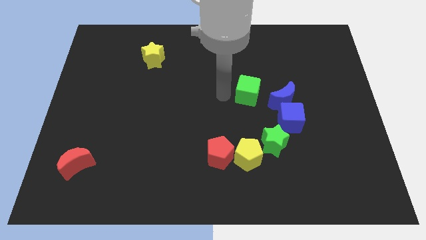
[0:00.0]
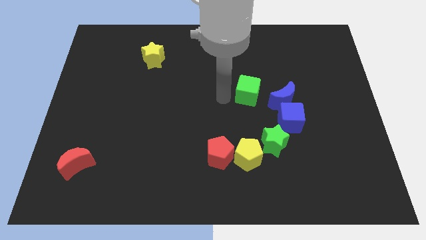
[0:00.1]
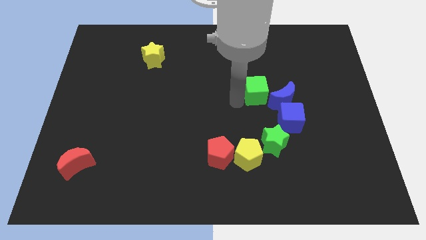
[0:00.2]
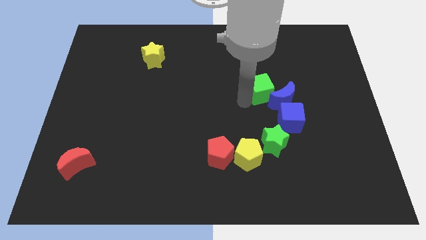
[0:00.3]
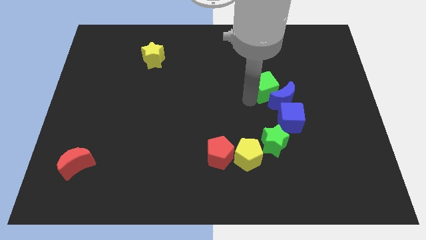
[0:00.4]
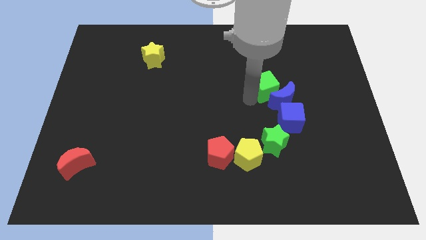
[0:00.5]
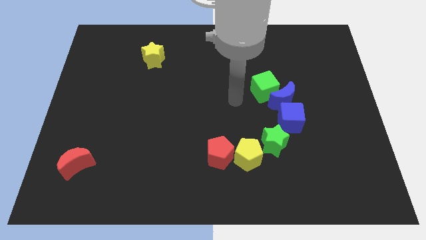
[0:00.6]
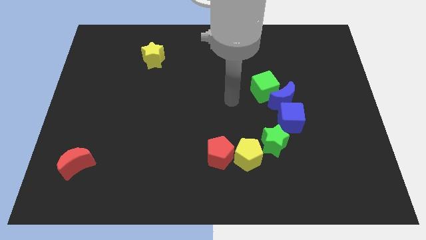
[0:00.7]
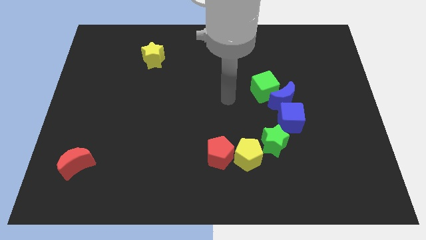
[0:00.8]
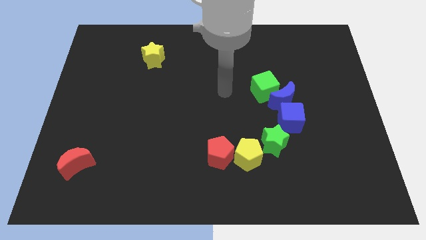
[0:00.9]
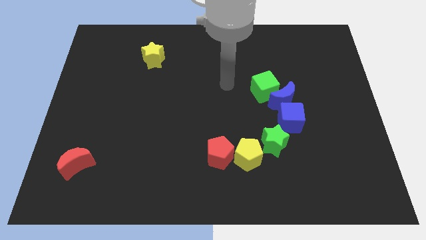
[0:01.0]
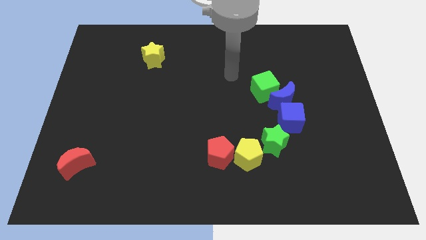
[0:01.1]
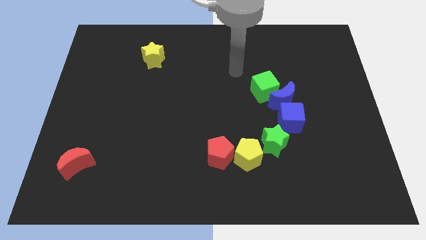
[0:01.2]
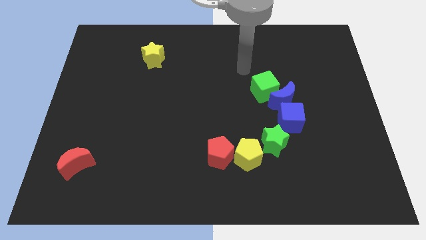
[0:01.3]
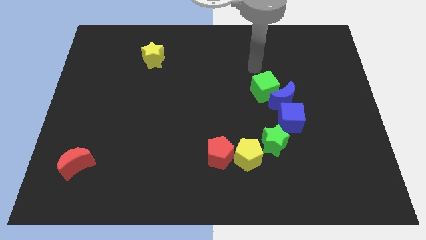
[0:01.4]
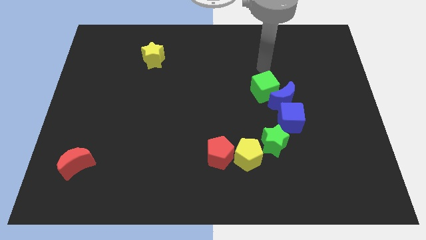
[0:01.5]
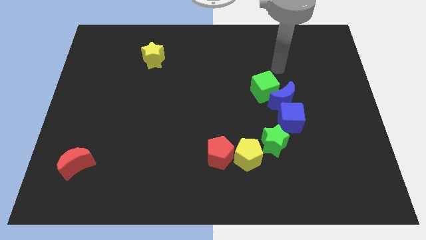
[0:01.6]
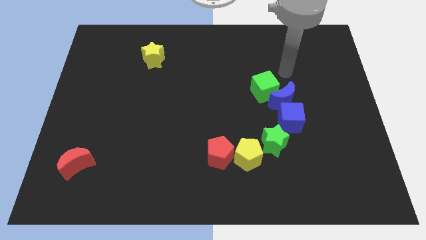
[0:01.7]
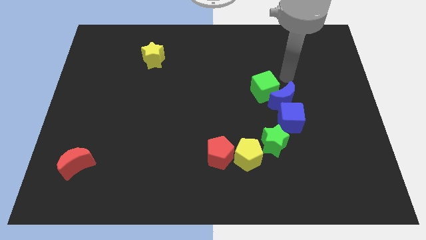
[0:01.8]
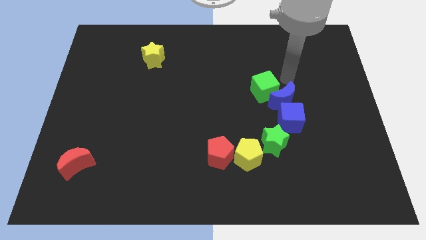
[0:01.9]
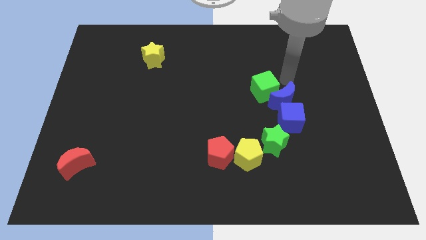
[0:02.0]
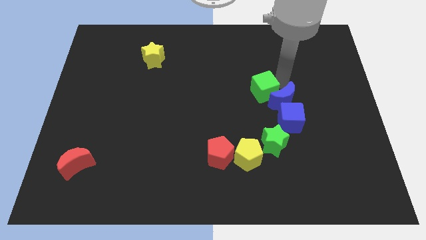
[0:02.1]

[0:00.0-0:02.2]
move the green cube into the blue crescent

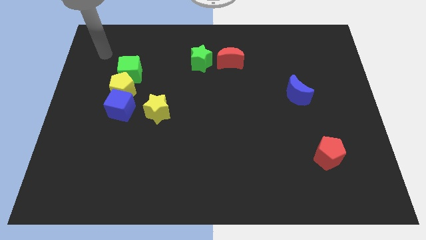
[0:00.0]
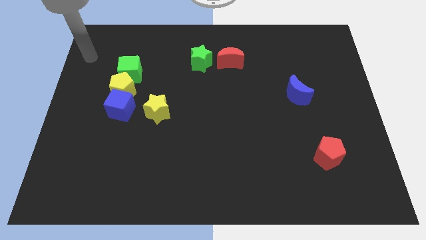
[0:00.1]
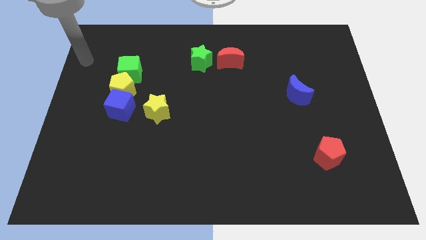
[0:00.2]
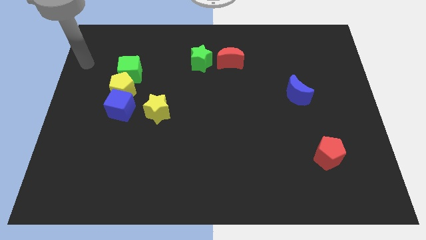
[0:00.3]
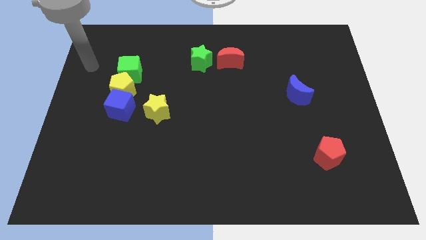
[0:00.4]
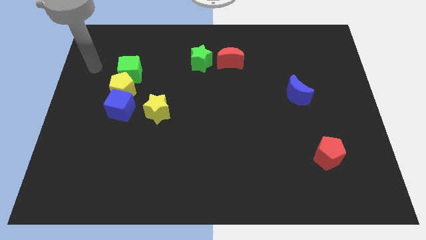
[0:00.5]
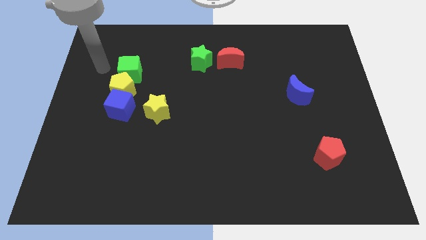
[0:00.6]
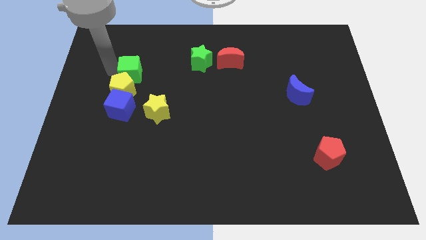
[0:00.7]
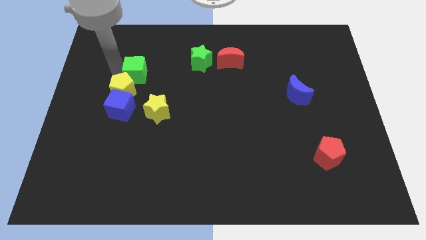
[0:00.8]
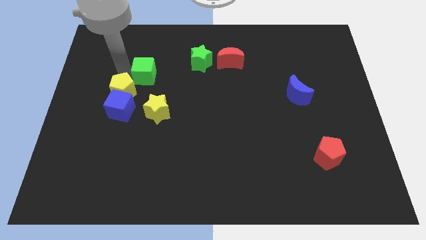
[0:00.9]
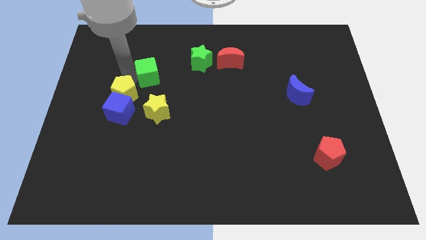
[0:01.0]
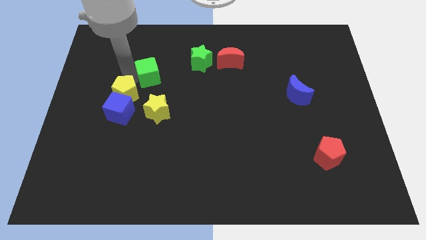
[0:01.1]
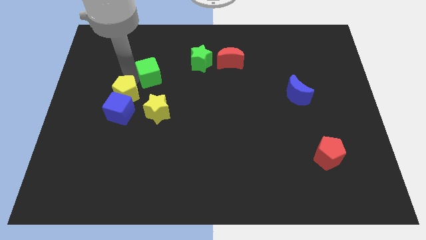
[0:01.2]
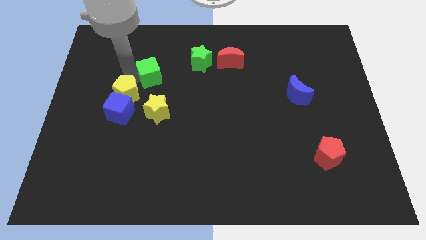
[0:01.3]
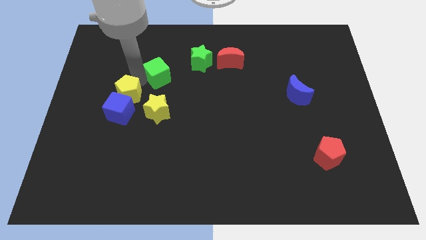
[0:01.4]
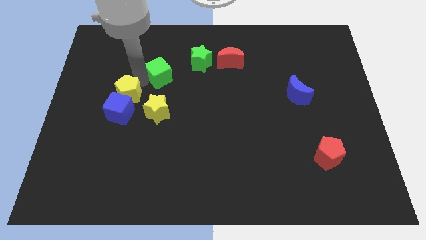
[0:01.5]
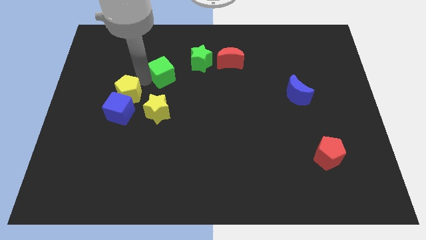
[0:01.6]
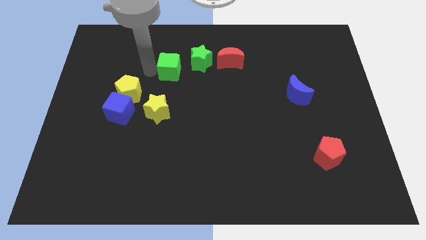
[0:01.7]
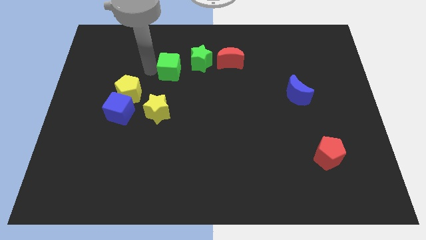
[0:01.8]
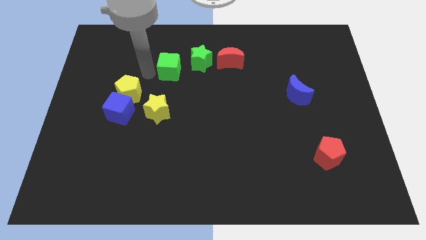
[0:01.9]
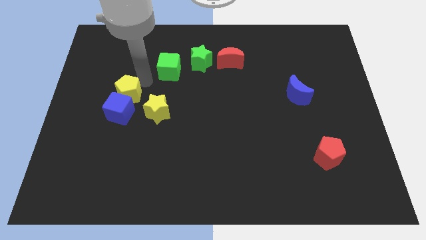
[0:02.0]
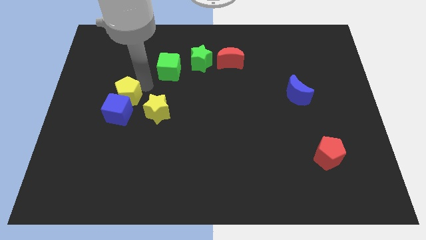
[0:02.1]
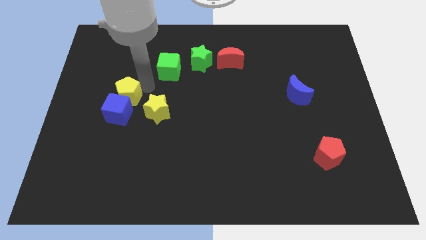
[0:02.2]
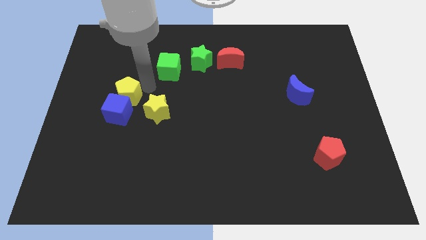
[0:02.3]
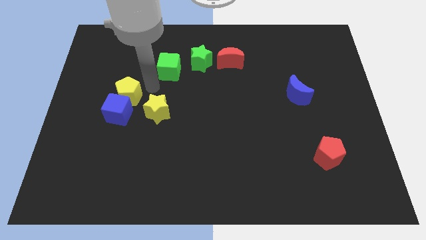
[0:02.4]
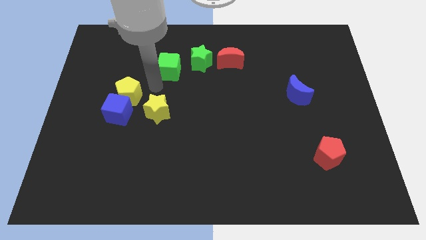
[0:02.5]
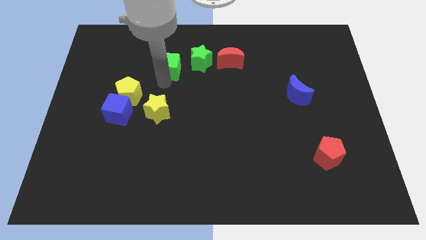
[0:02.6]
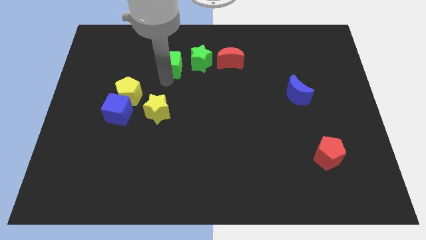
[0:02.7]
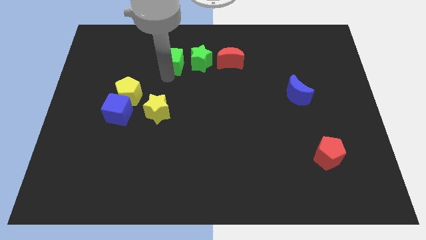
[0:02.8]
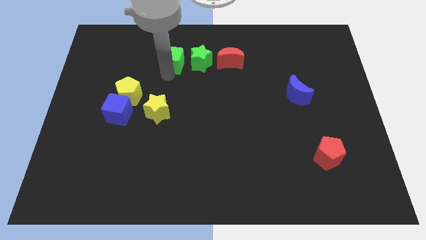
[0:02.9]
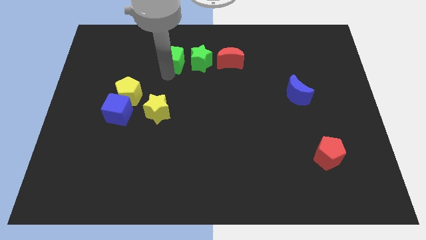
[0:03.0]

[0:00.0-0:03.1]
move green cube to the left of green star

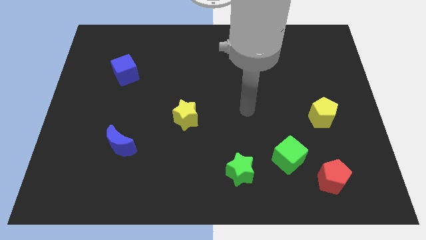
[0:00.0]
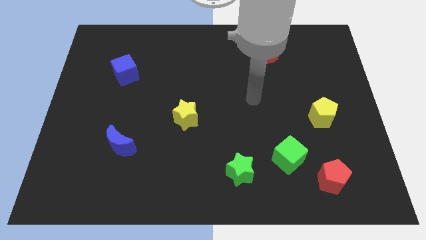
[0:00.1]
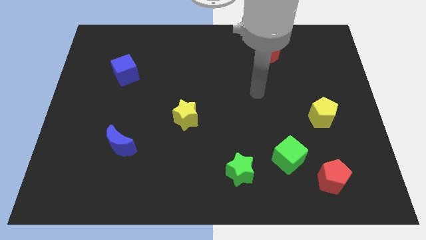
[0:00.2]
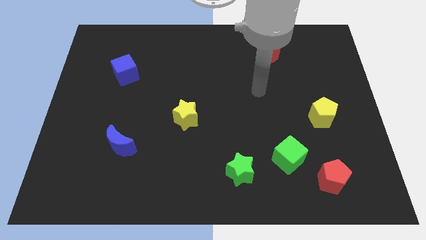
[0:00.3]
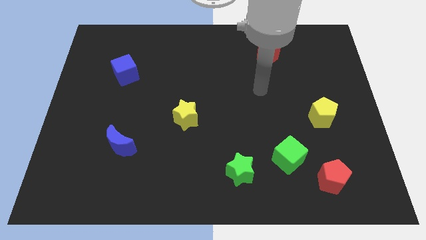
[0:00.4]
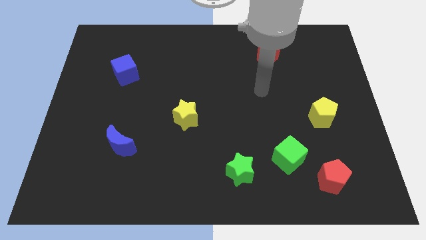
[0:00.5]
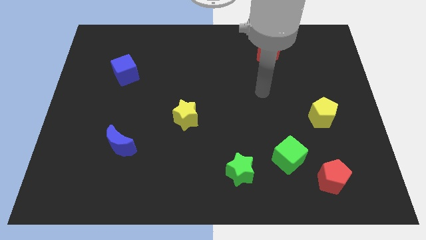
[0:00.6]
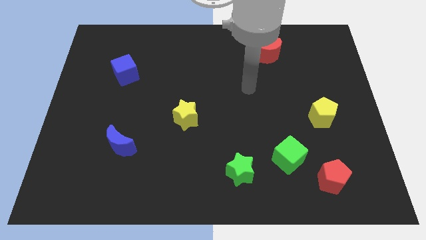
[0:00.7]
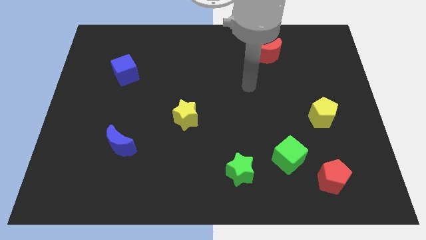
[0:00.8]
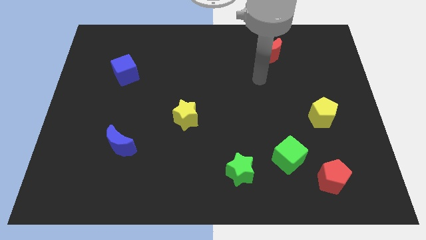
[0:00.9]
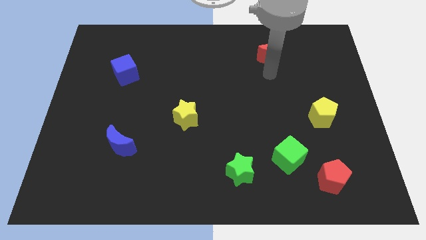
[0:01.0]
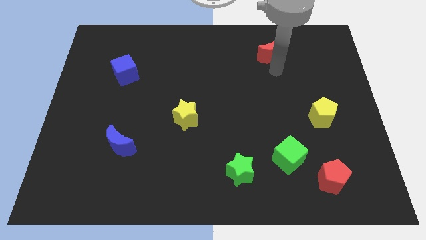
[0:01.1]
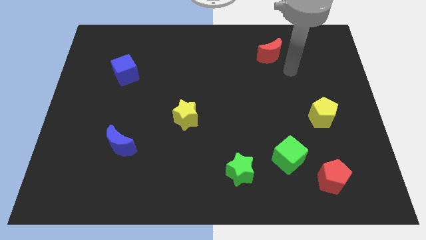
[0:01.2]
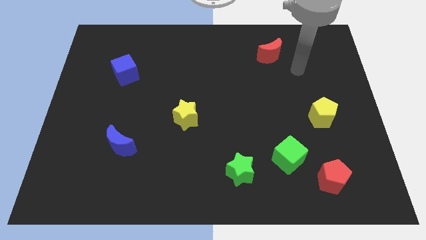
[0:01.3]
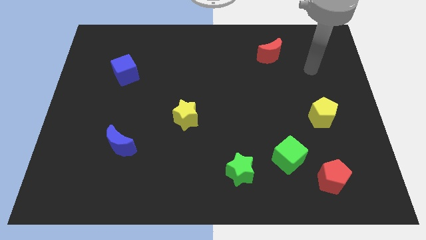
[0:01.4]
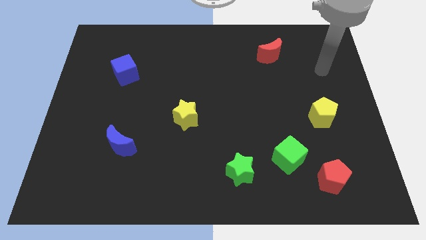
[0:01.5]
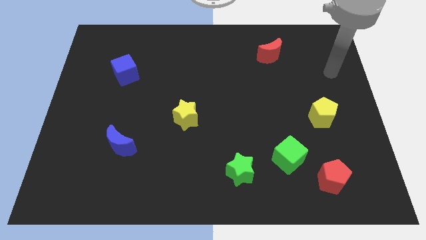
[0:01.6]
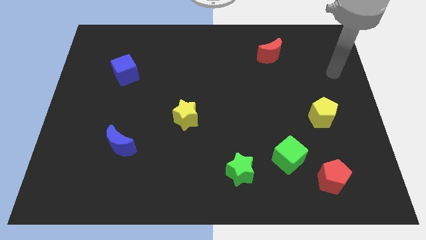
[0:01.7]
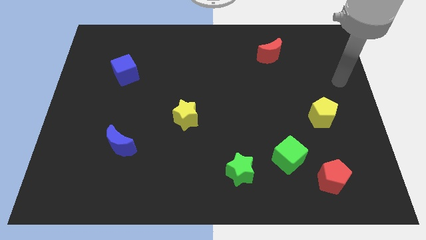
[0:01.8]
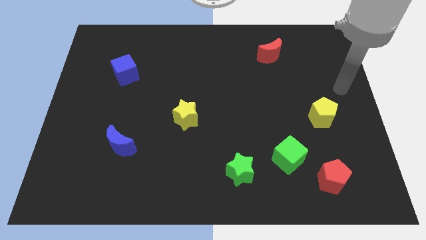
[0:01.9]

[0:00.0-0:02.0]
move your arm towards the right side of the yellow pentagon

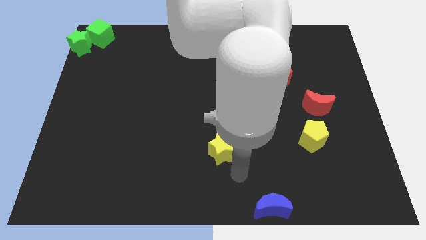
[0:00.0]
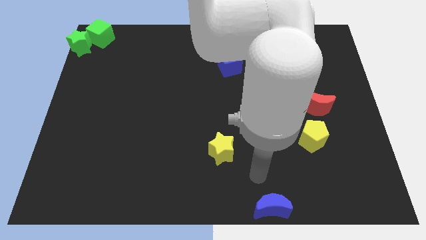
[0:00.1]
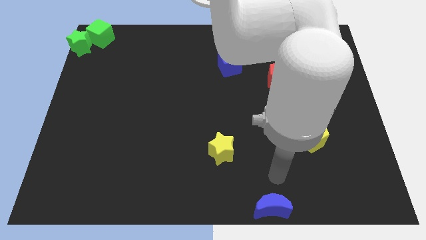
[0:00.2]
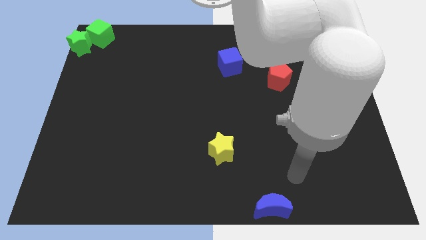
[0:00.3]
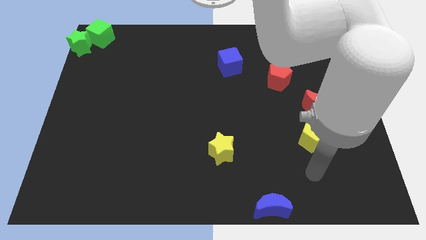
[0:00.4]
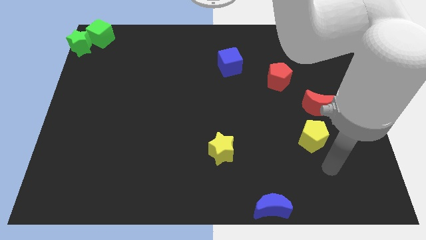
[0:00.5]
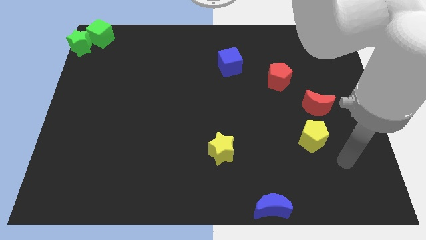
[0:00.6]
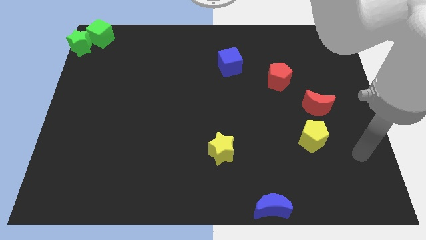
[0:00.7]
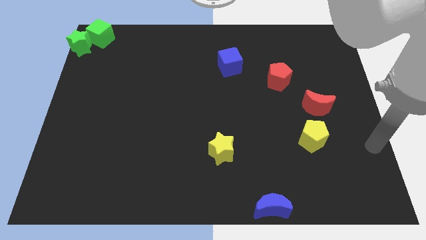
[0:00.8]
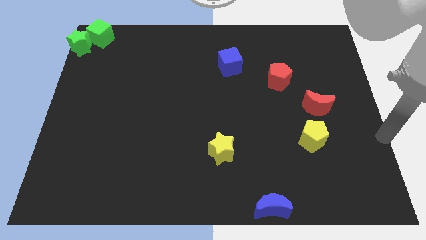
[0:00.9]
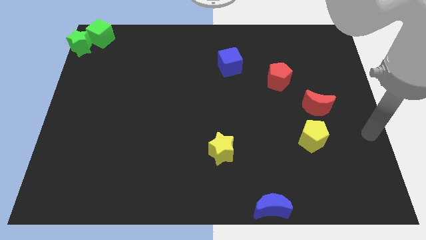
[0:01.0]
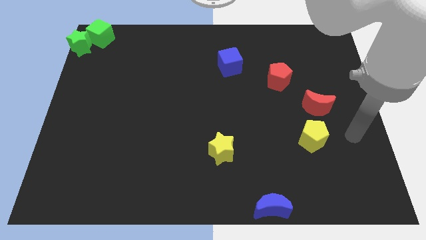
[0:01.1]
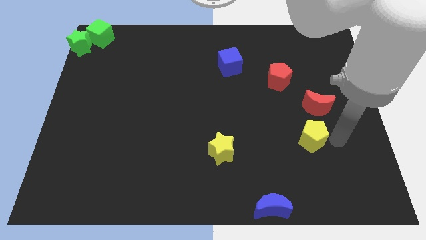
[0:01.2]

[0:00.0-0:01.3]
move close to the yellow pentagon

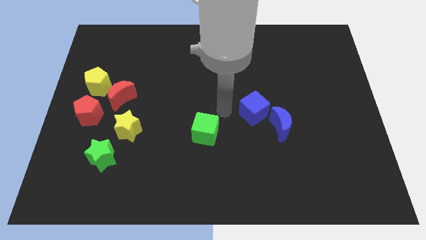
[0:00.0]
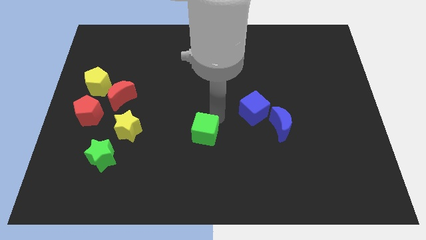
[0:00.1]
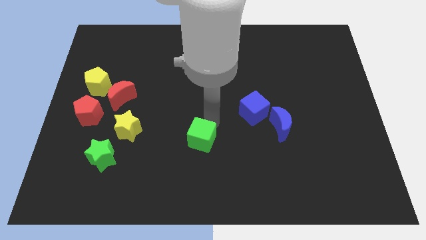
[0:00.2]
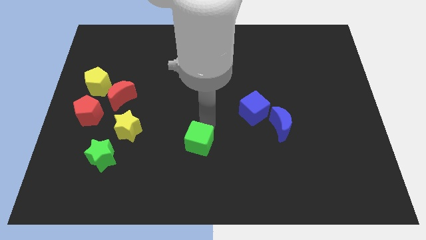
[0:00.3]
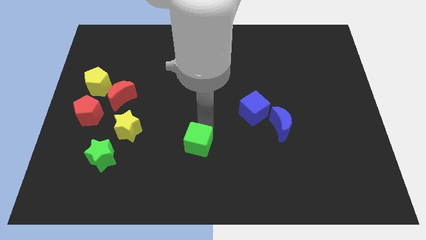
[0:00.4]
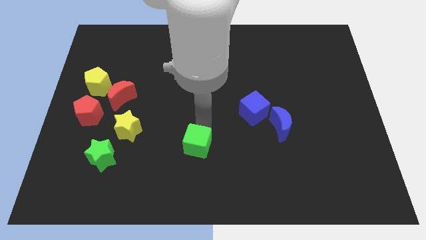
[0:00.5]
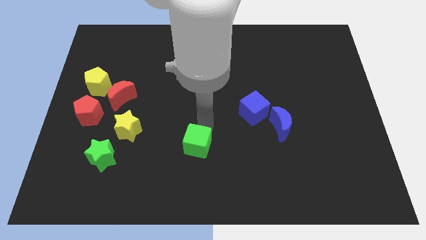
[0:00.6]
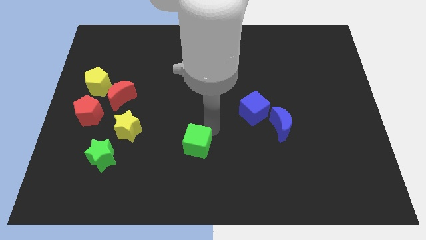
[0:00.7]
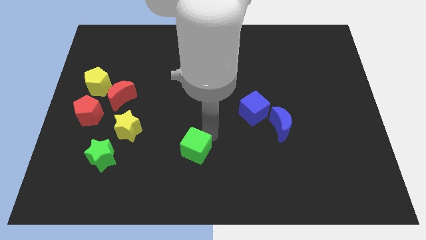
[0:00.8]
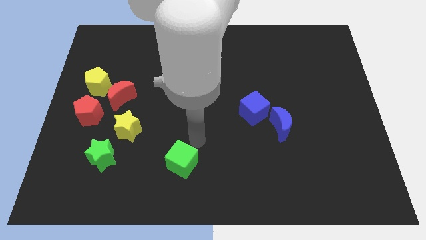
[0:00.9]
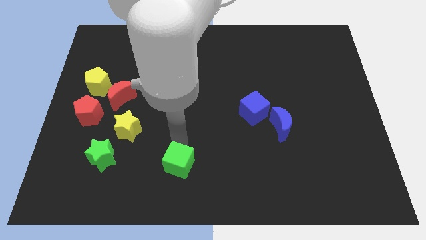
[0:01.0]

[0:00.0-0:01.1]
move the green cube to the bottom of the board
